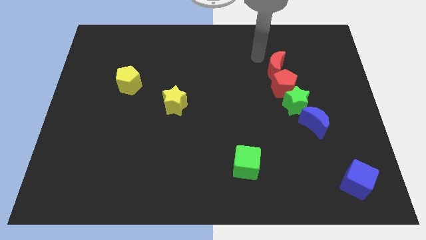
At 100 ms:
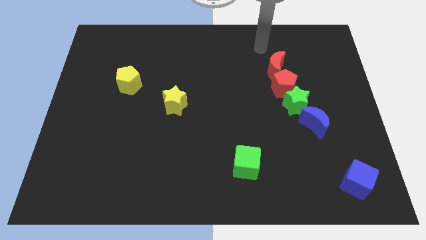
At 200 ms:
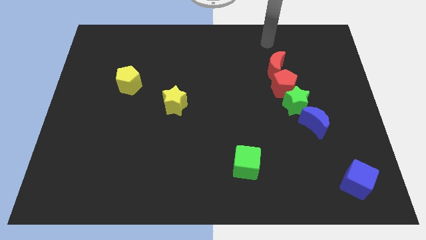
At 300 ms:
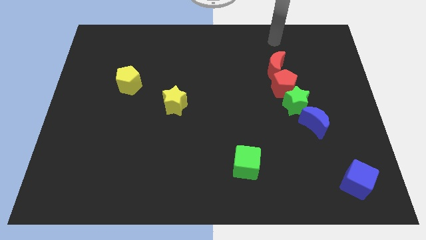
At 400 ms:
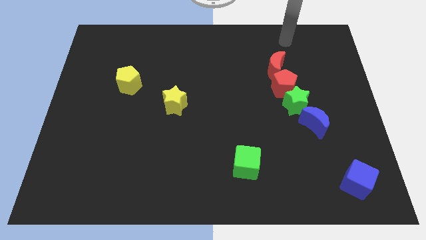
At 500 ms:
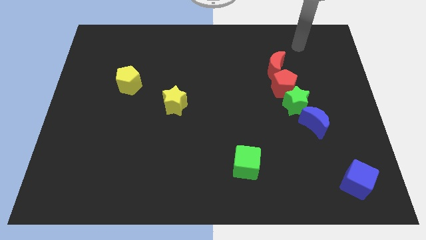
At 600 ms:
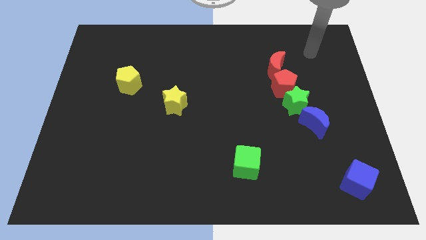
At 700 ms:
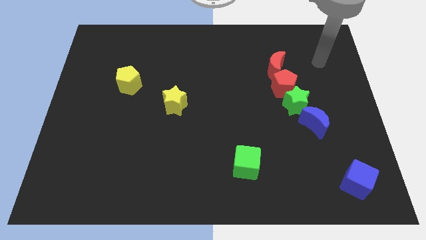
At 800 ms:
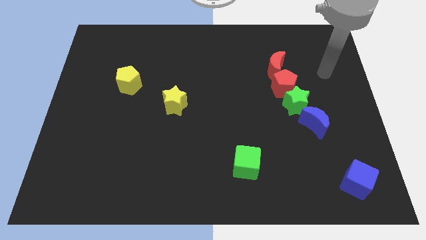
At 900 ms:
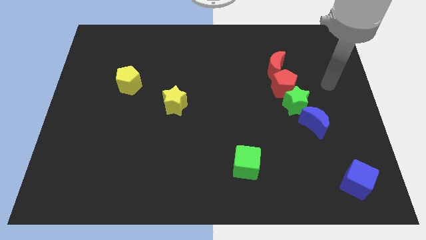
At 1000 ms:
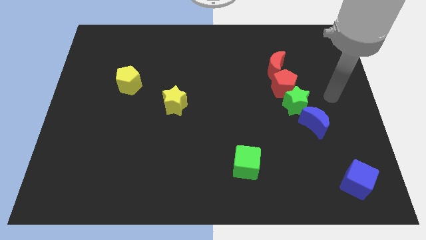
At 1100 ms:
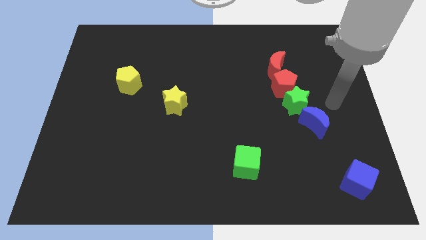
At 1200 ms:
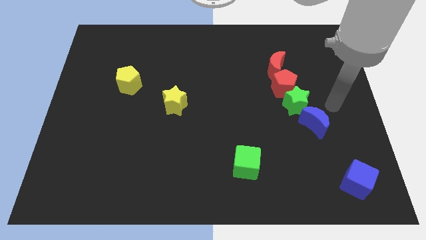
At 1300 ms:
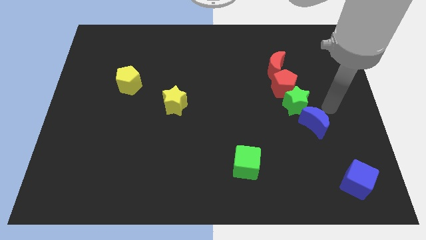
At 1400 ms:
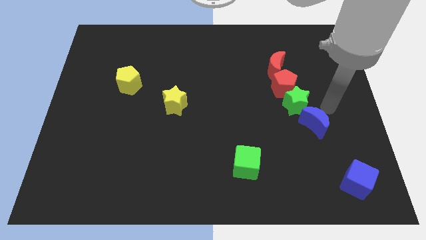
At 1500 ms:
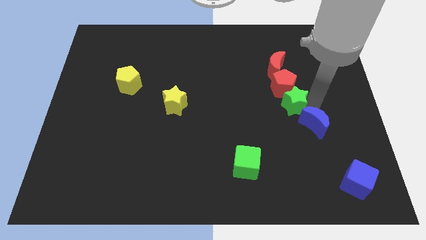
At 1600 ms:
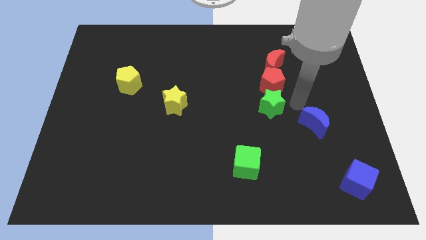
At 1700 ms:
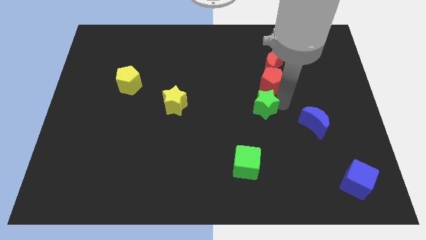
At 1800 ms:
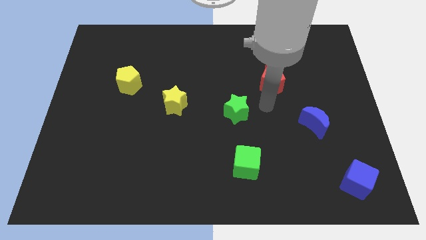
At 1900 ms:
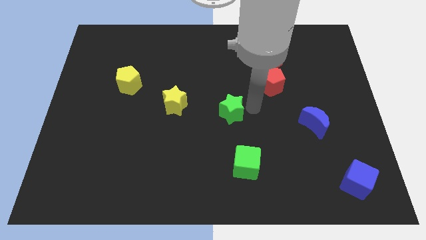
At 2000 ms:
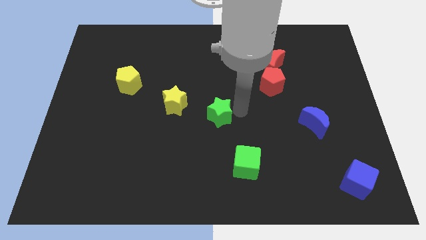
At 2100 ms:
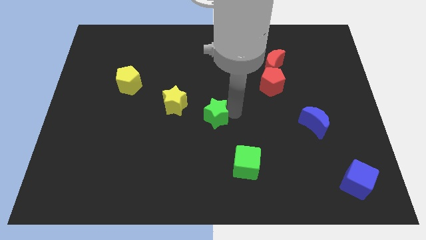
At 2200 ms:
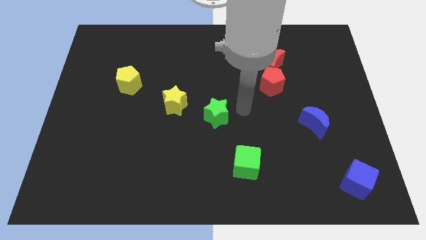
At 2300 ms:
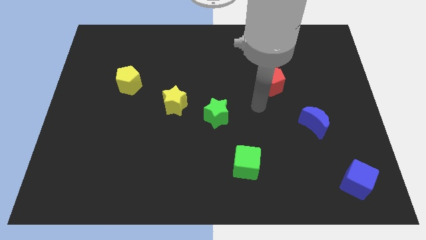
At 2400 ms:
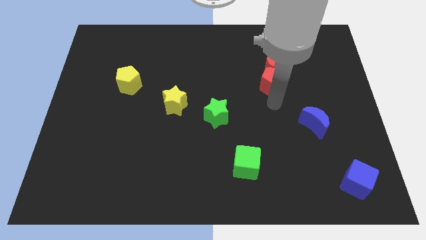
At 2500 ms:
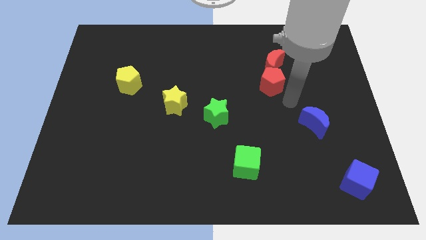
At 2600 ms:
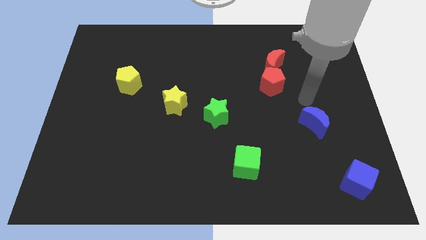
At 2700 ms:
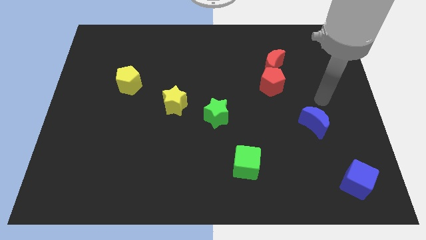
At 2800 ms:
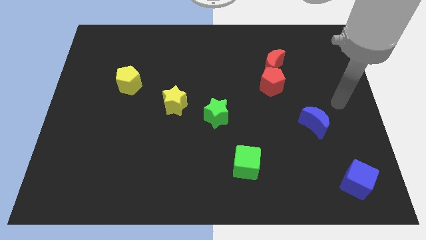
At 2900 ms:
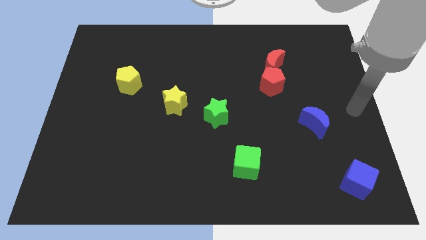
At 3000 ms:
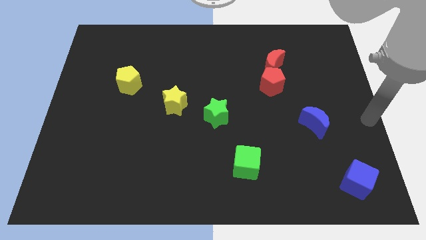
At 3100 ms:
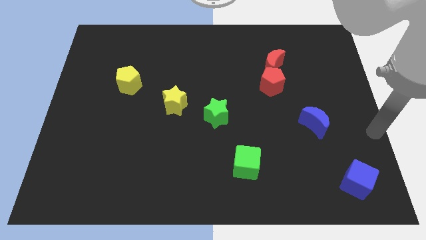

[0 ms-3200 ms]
place the green star in the center

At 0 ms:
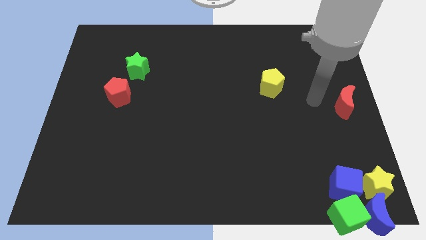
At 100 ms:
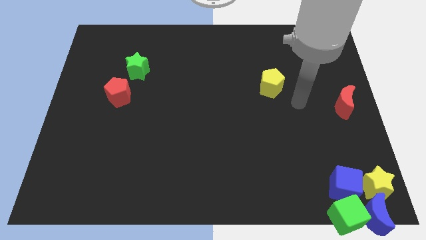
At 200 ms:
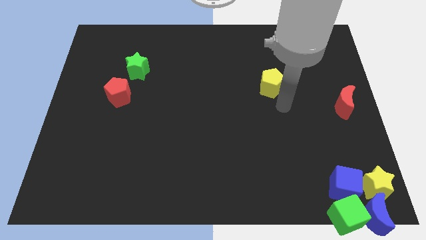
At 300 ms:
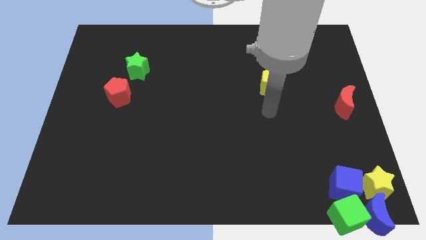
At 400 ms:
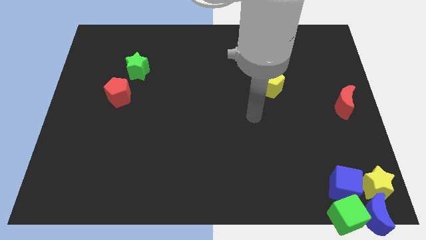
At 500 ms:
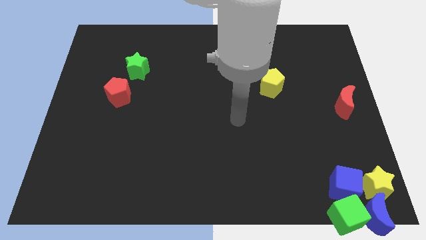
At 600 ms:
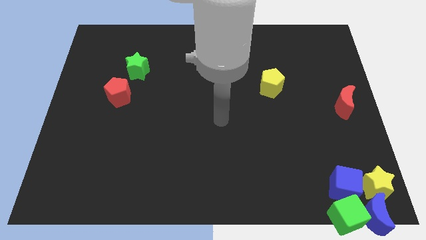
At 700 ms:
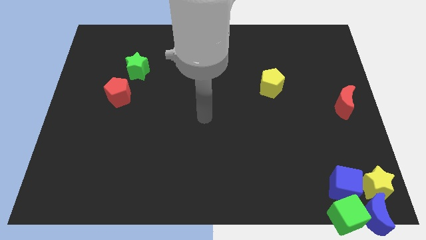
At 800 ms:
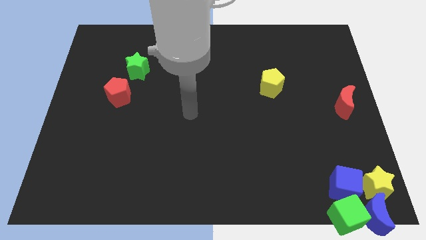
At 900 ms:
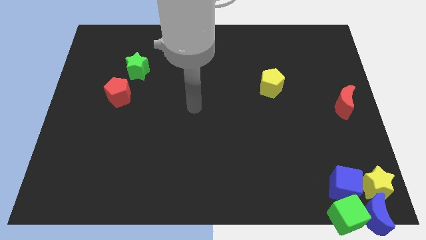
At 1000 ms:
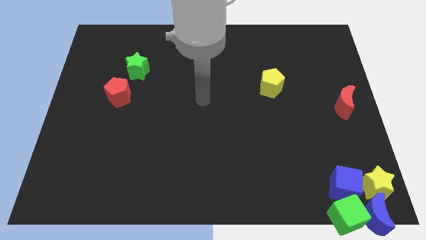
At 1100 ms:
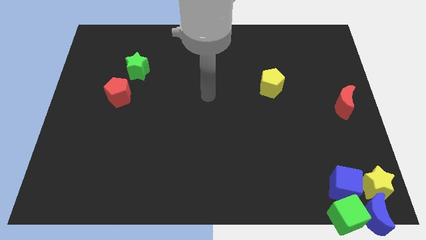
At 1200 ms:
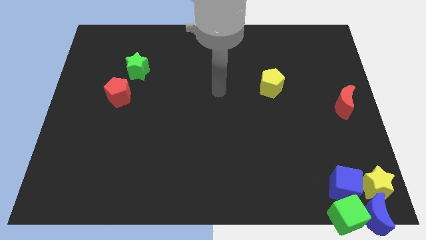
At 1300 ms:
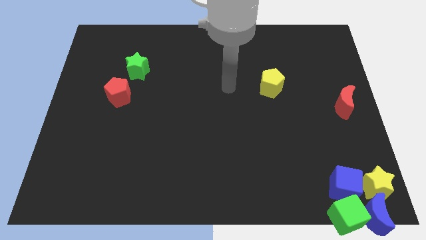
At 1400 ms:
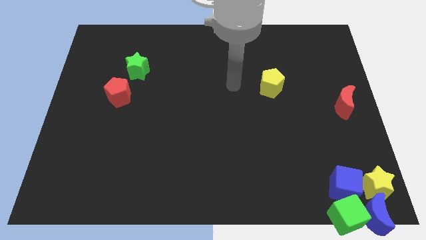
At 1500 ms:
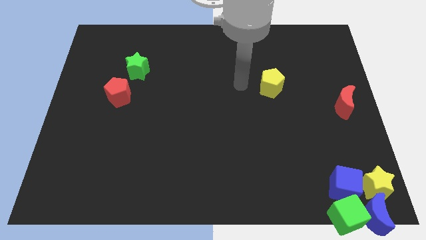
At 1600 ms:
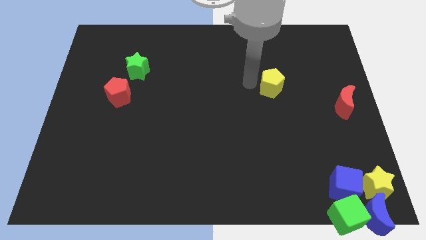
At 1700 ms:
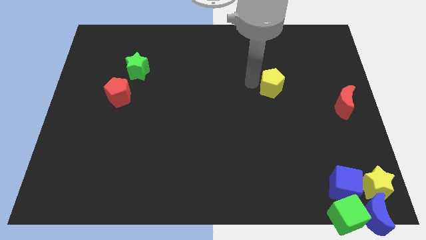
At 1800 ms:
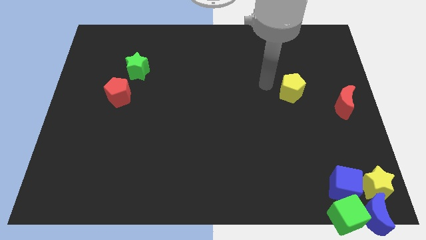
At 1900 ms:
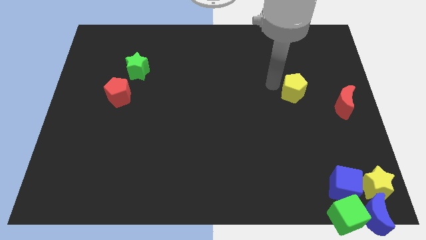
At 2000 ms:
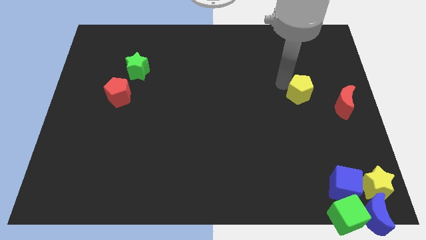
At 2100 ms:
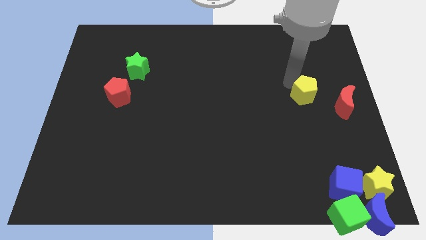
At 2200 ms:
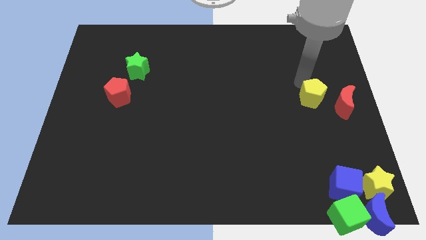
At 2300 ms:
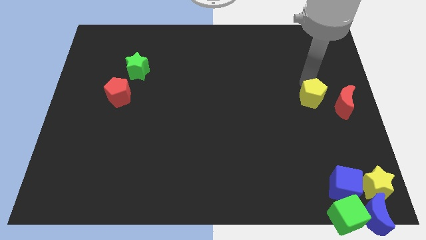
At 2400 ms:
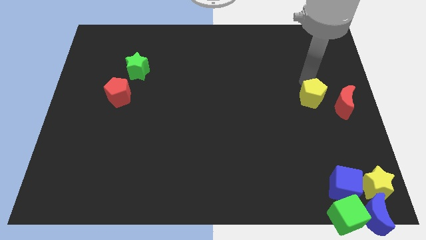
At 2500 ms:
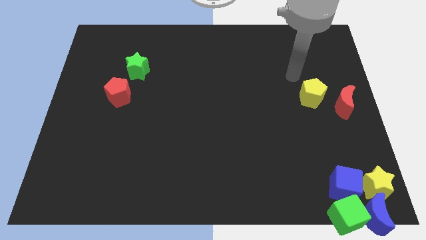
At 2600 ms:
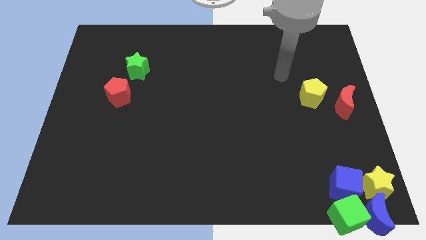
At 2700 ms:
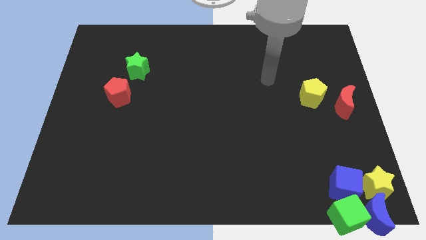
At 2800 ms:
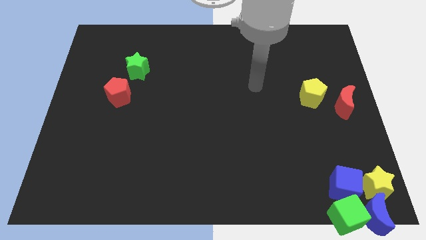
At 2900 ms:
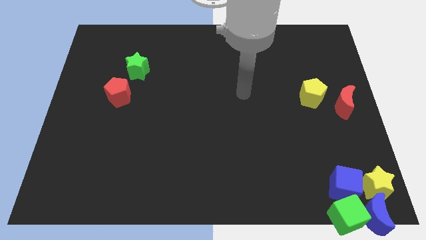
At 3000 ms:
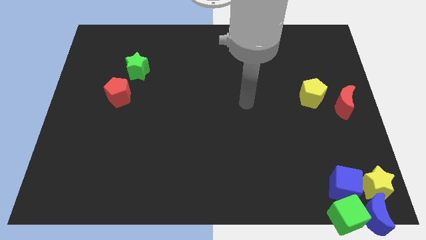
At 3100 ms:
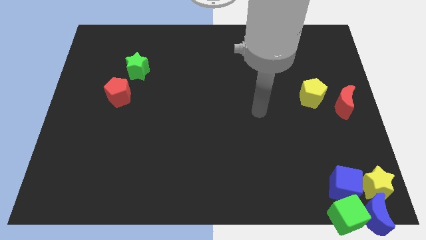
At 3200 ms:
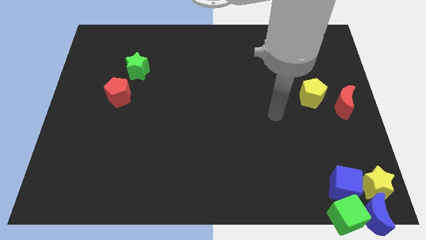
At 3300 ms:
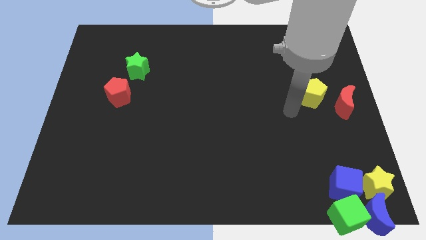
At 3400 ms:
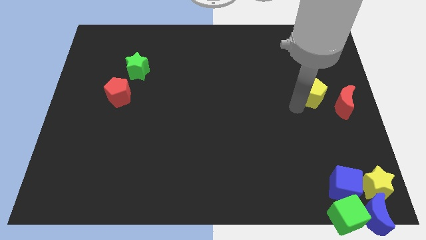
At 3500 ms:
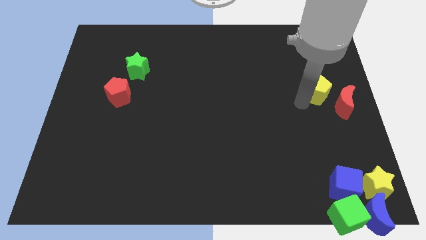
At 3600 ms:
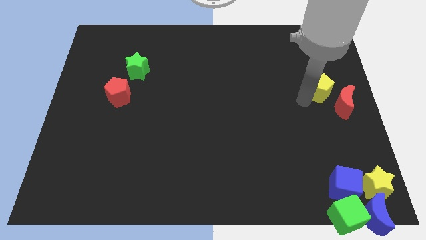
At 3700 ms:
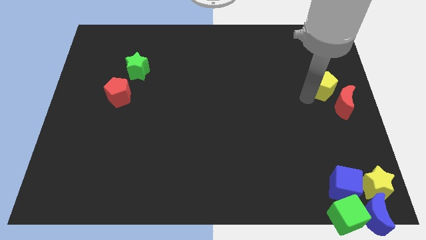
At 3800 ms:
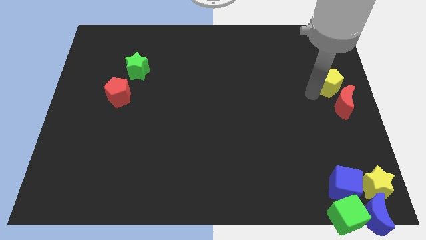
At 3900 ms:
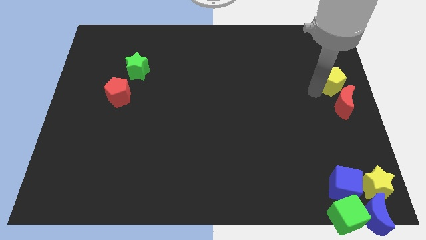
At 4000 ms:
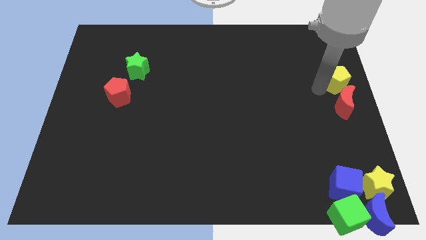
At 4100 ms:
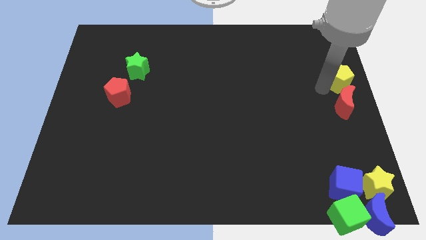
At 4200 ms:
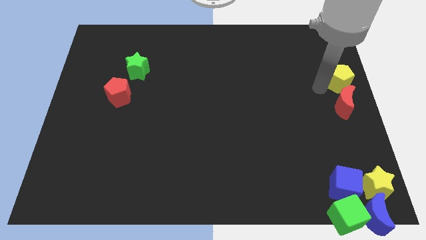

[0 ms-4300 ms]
place the yellow pentagon on the top of the red moon

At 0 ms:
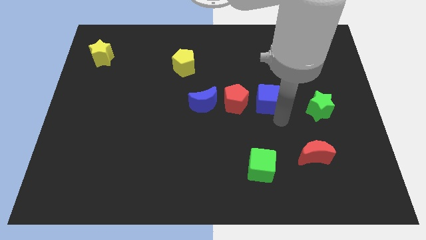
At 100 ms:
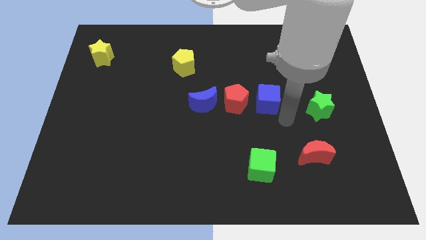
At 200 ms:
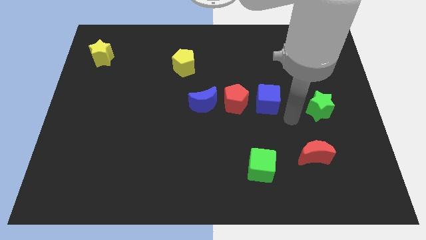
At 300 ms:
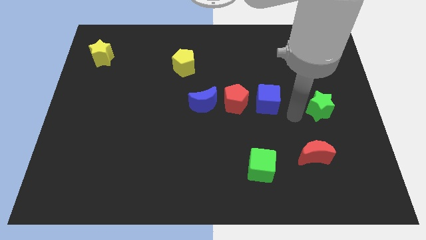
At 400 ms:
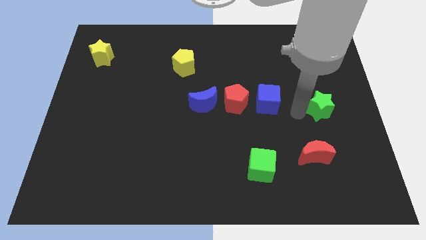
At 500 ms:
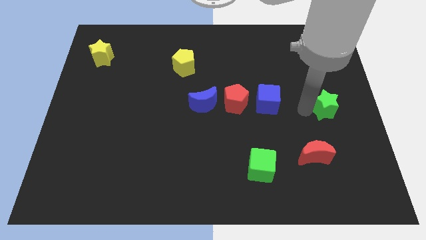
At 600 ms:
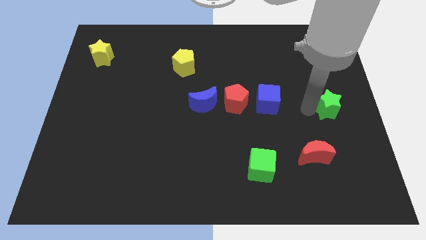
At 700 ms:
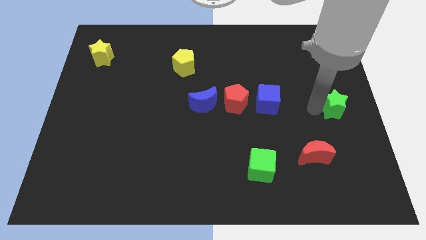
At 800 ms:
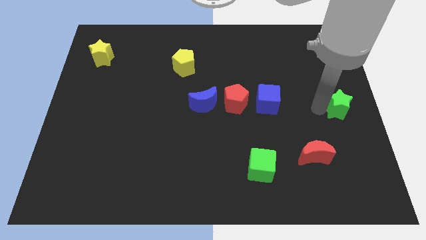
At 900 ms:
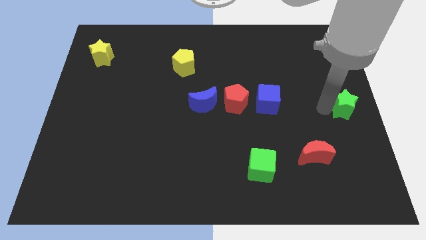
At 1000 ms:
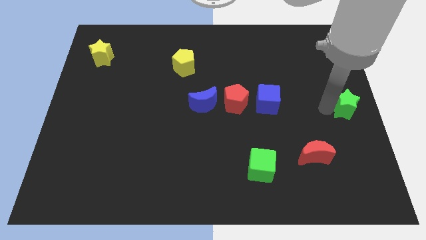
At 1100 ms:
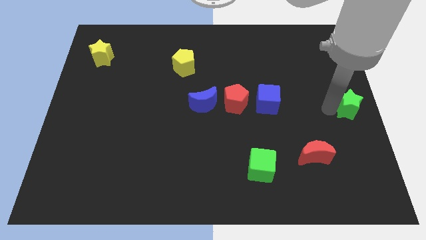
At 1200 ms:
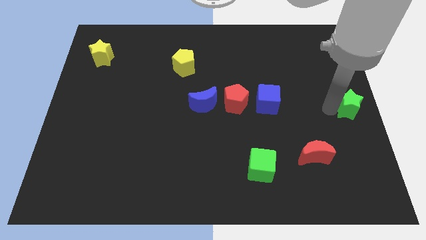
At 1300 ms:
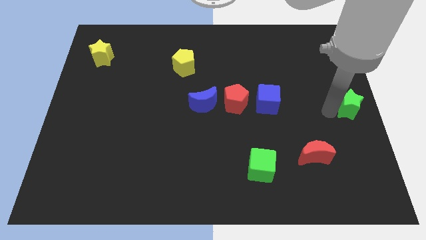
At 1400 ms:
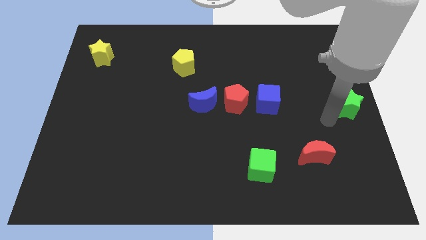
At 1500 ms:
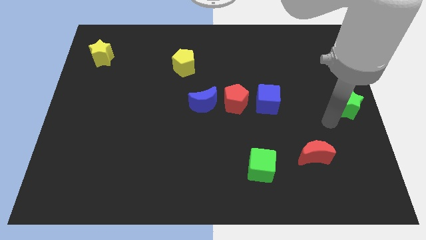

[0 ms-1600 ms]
move the green star to the center right of the board
